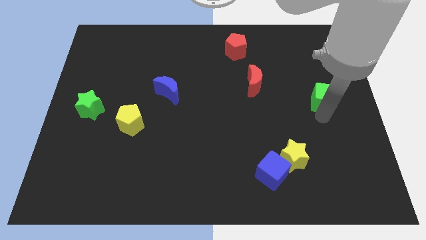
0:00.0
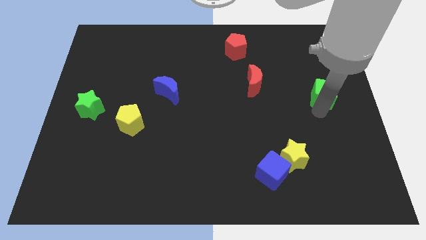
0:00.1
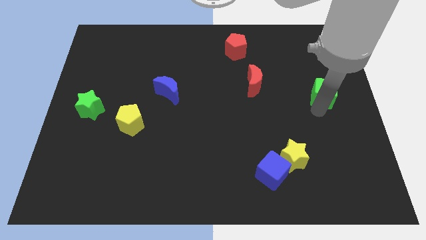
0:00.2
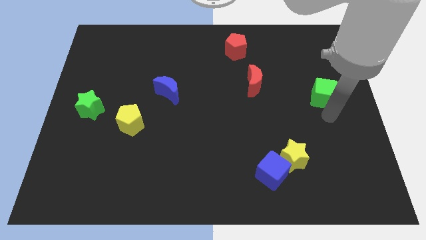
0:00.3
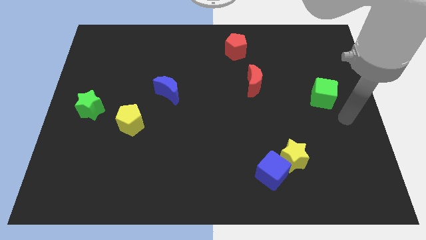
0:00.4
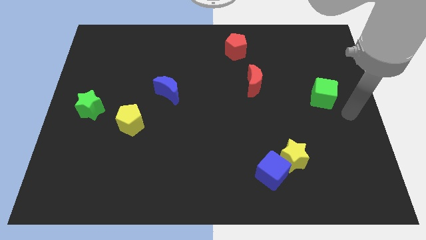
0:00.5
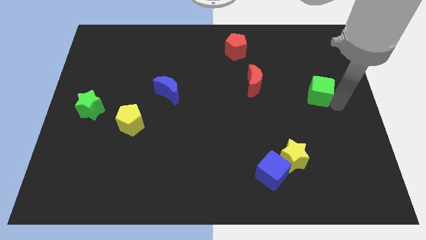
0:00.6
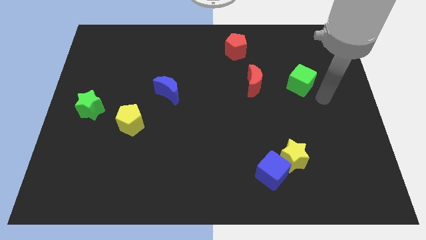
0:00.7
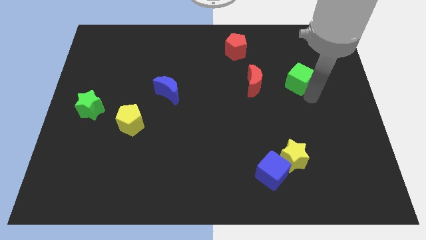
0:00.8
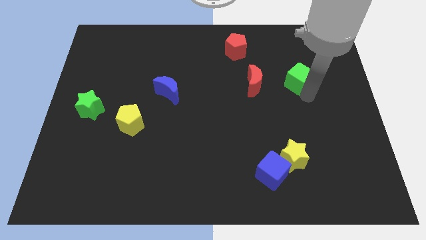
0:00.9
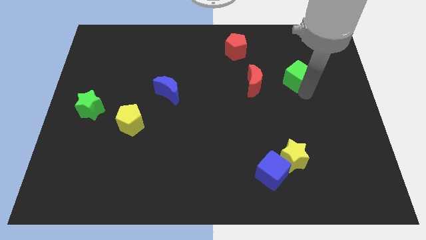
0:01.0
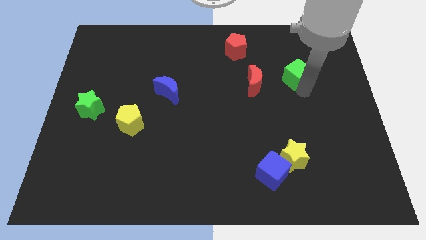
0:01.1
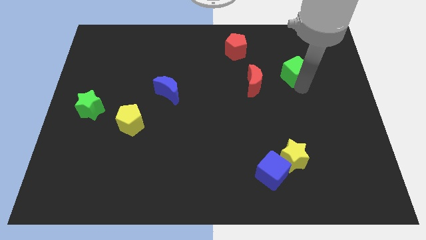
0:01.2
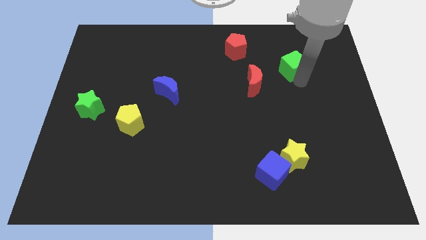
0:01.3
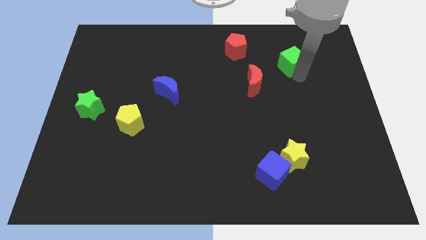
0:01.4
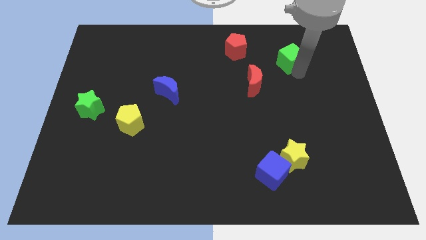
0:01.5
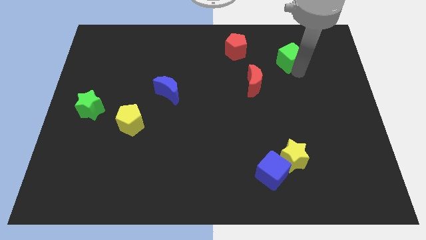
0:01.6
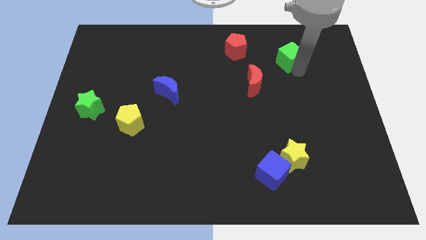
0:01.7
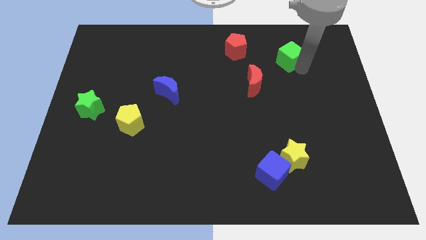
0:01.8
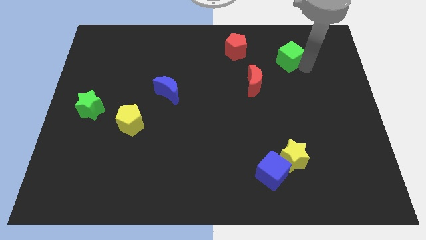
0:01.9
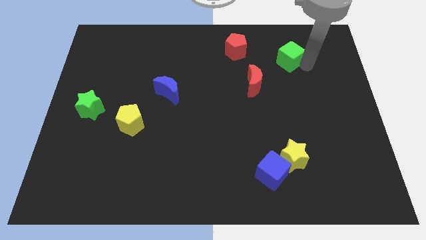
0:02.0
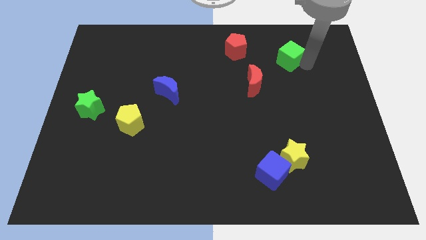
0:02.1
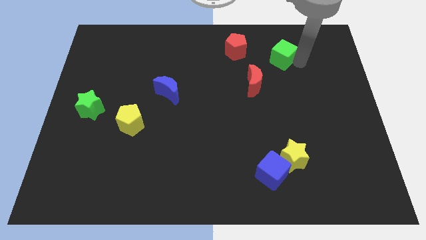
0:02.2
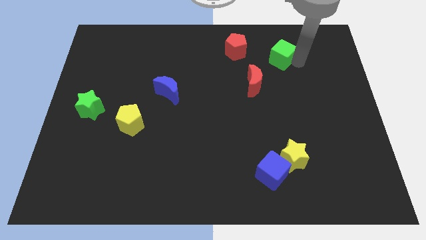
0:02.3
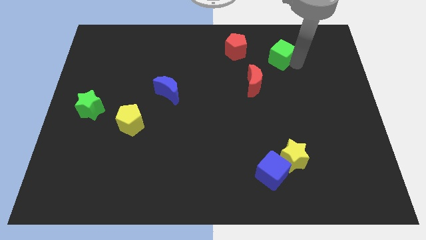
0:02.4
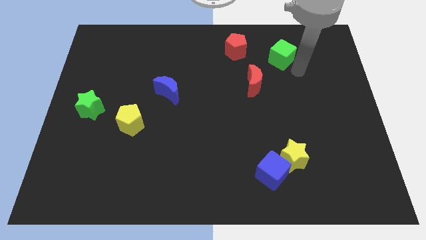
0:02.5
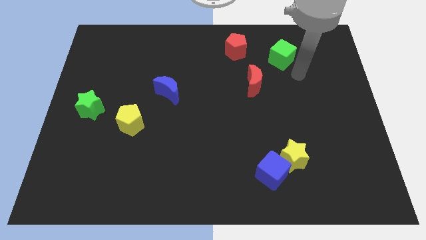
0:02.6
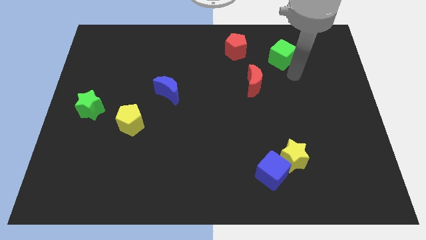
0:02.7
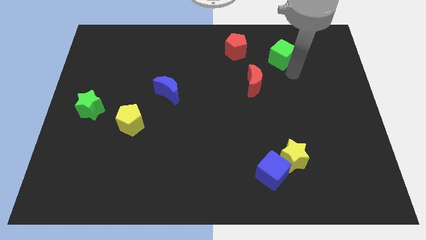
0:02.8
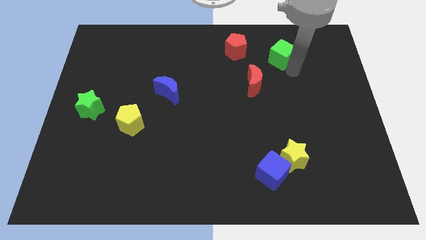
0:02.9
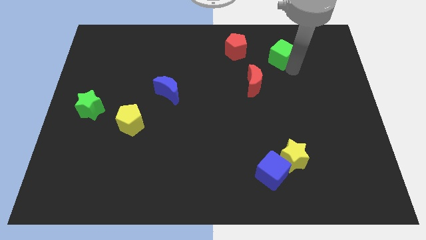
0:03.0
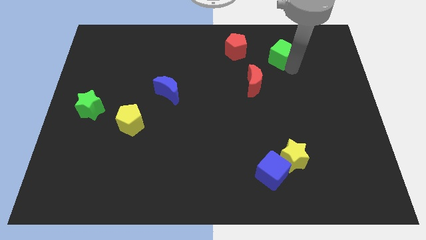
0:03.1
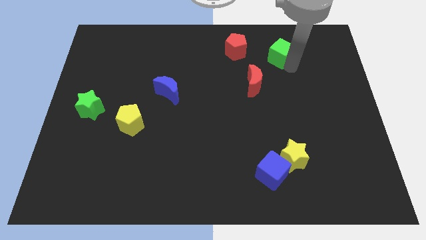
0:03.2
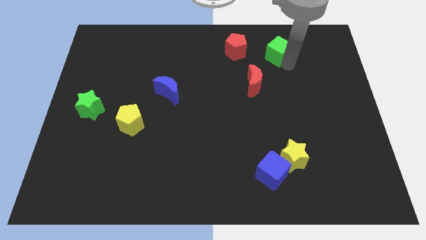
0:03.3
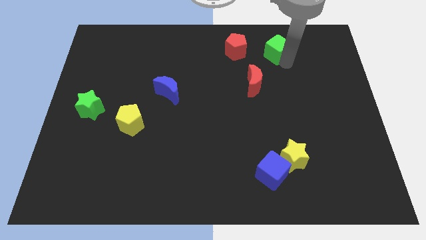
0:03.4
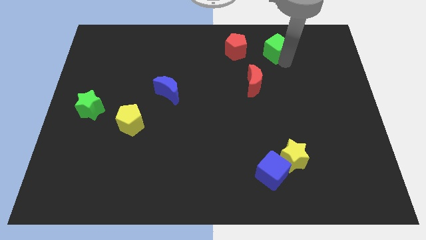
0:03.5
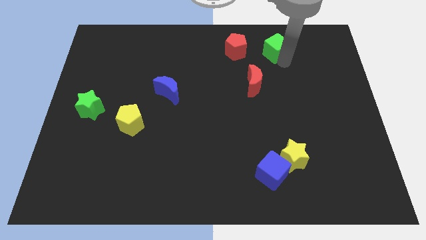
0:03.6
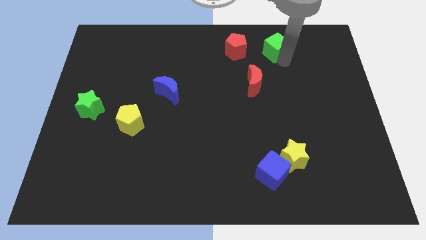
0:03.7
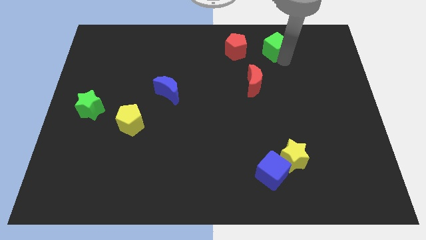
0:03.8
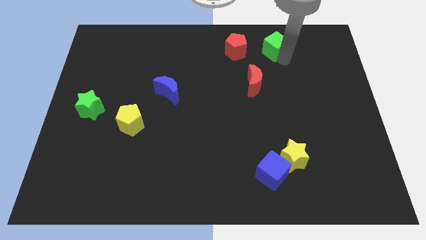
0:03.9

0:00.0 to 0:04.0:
push the green cube to the right of the red pentagon

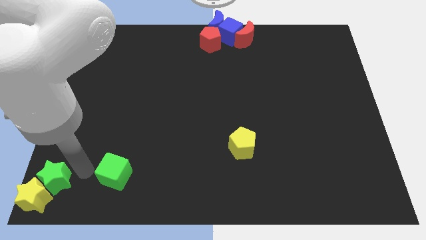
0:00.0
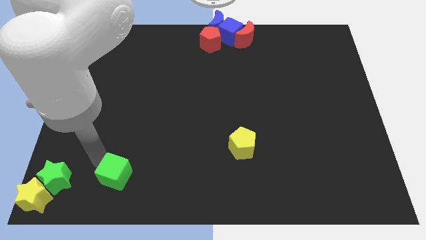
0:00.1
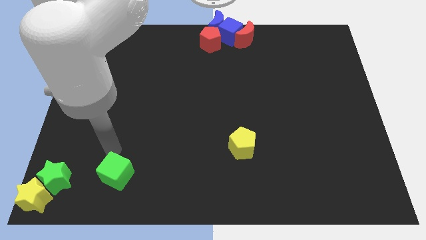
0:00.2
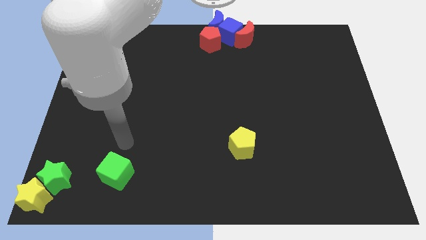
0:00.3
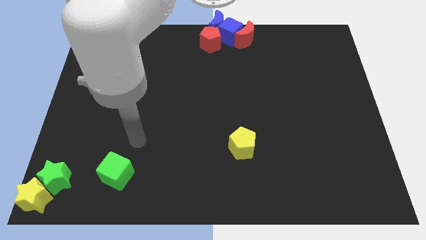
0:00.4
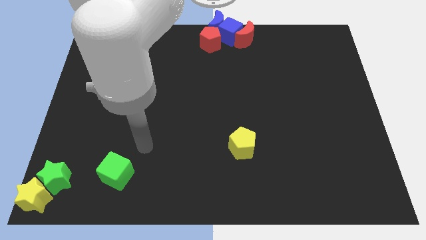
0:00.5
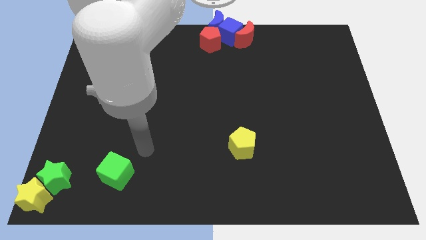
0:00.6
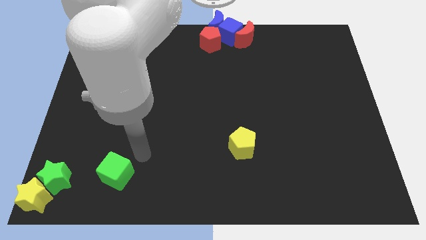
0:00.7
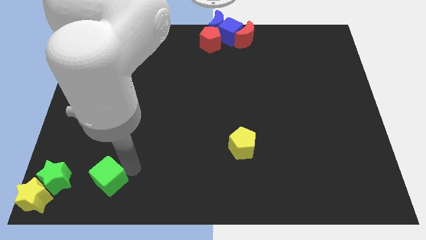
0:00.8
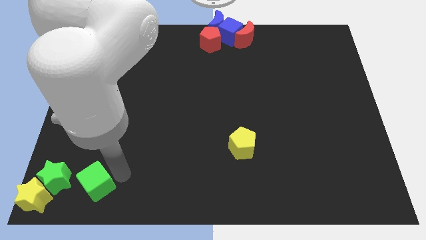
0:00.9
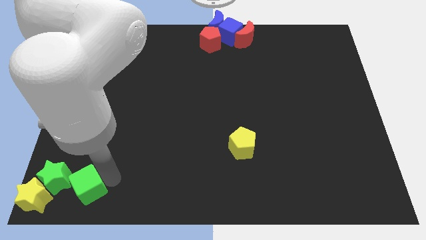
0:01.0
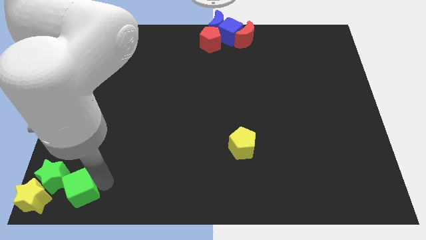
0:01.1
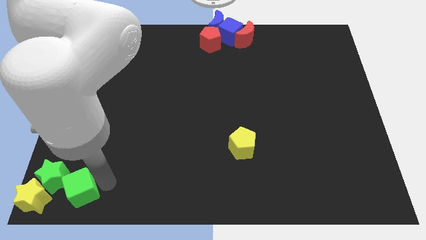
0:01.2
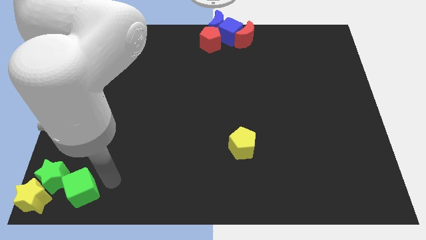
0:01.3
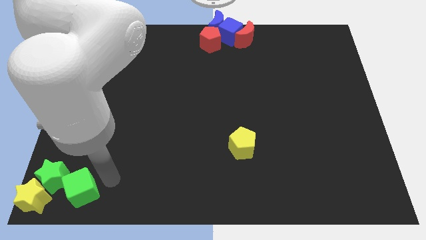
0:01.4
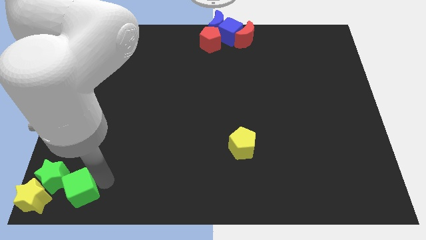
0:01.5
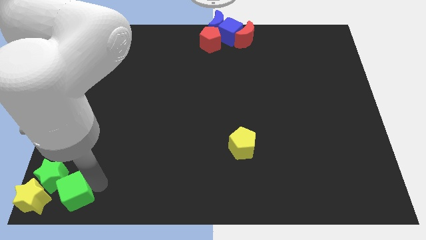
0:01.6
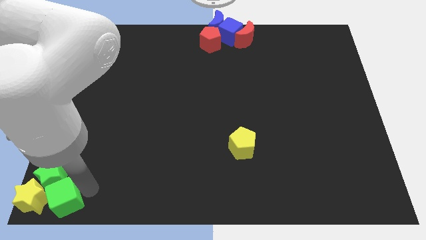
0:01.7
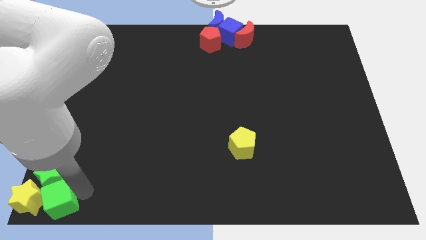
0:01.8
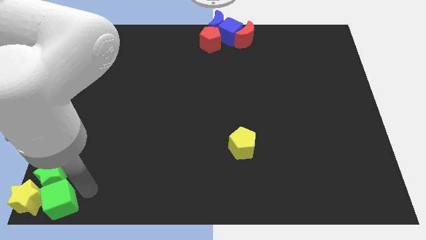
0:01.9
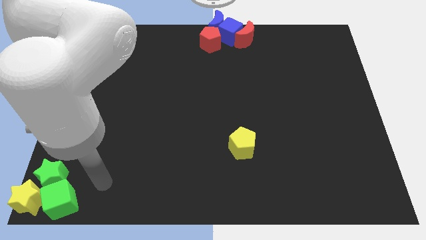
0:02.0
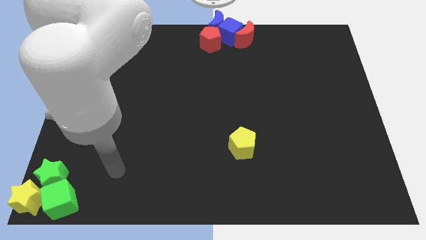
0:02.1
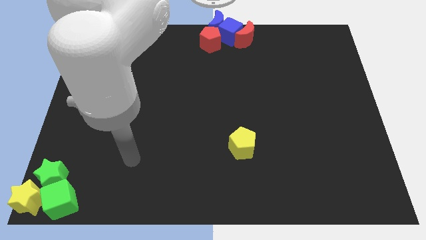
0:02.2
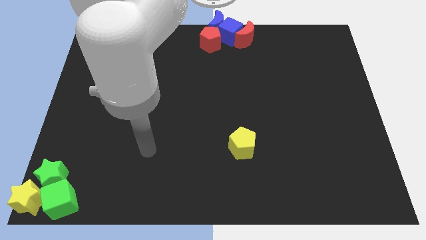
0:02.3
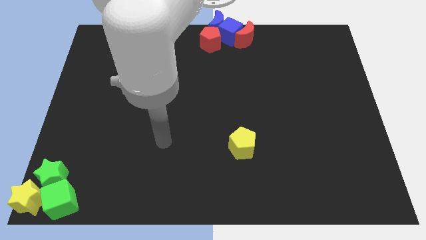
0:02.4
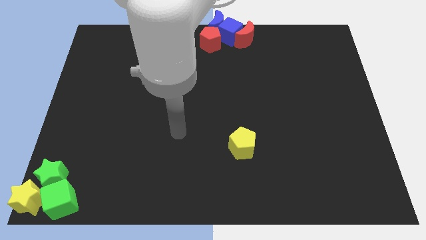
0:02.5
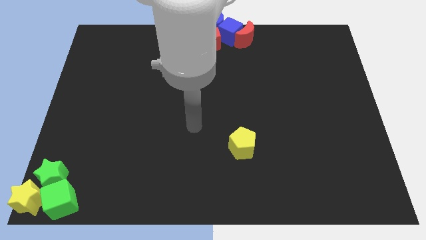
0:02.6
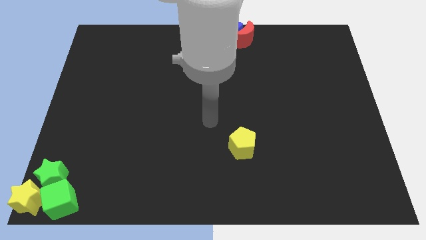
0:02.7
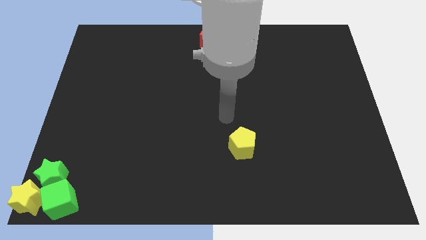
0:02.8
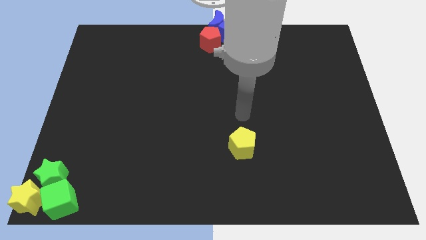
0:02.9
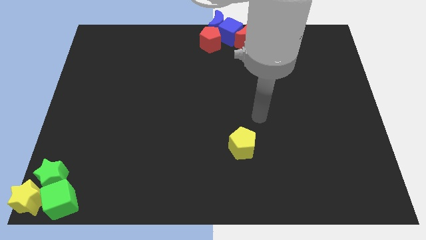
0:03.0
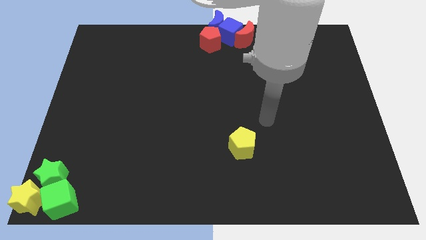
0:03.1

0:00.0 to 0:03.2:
push the green cube towards the yellow star

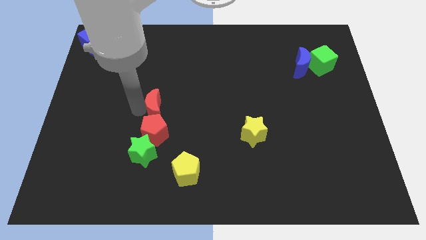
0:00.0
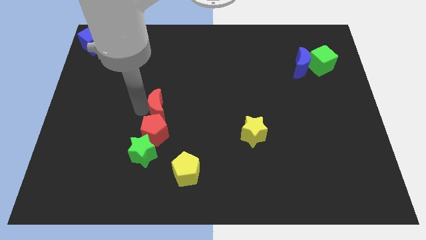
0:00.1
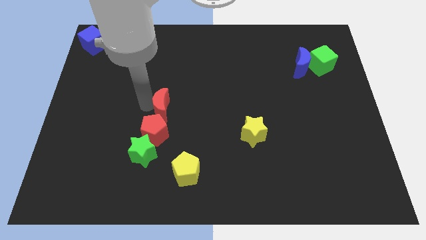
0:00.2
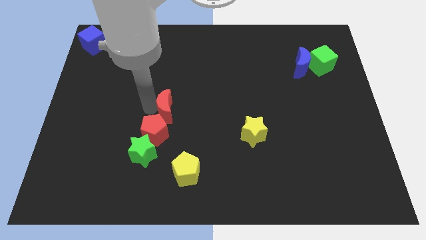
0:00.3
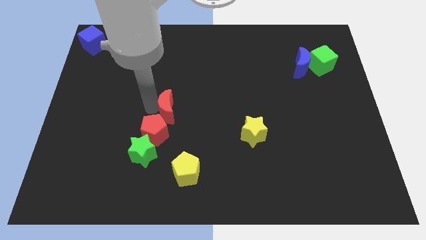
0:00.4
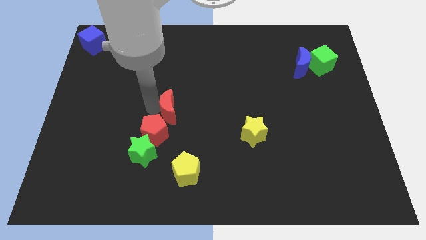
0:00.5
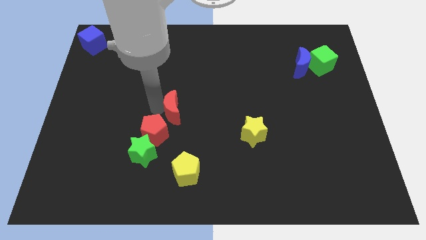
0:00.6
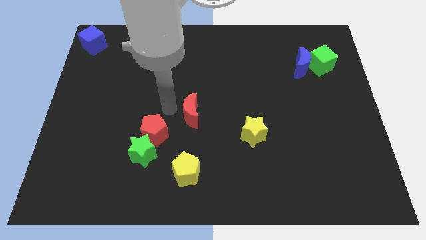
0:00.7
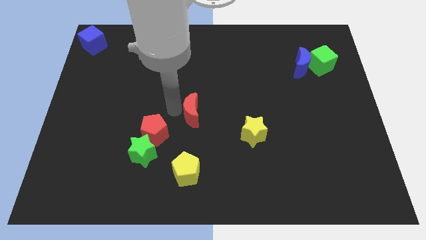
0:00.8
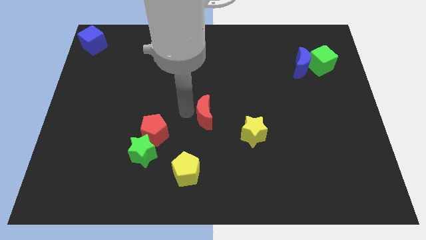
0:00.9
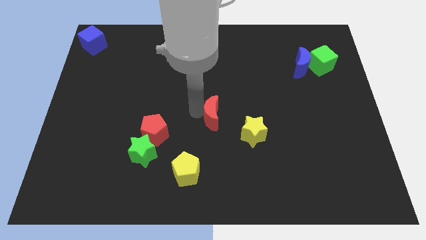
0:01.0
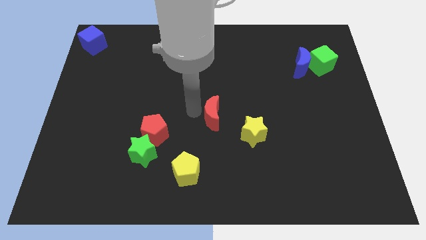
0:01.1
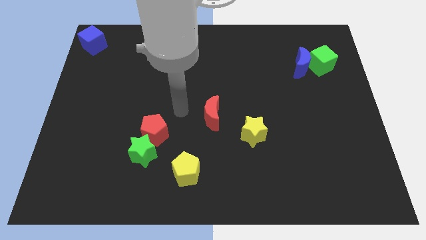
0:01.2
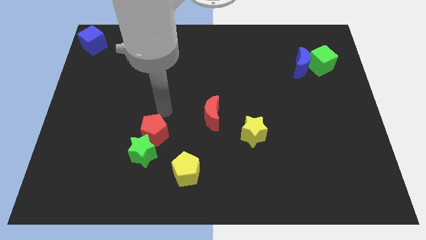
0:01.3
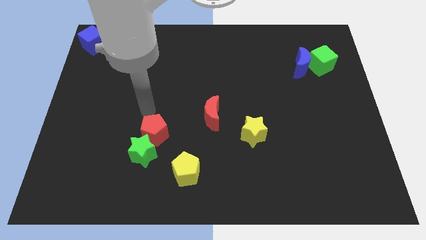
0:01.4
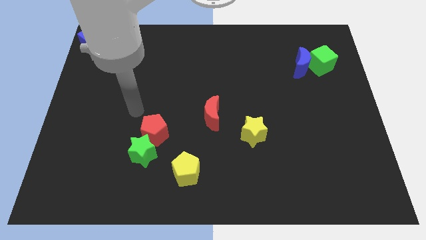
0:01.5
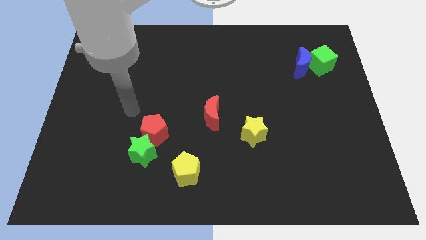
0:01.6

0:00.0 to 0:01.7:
move the red crescent slightly to the right
